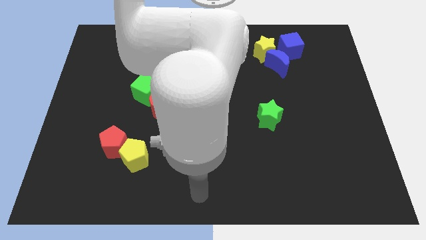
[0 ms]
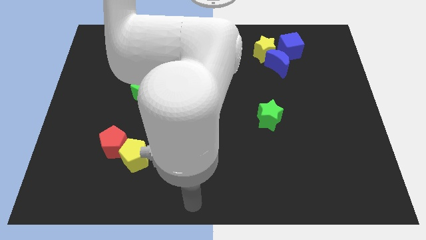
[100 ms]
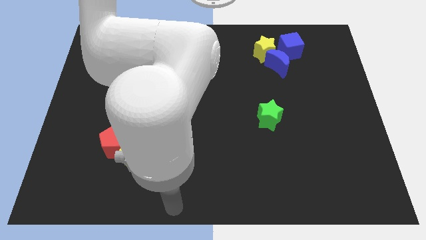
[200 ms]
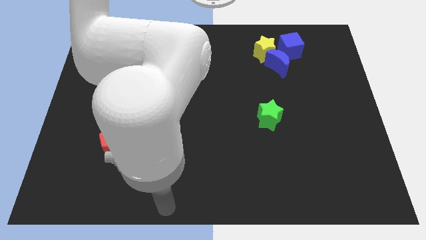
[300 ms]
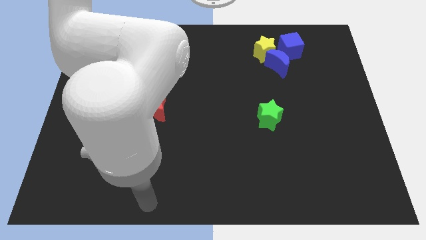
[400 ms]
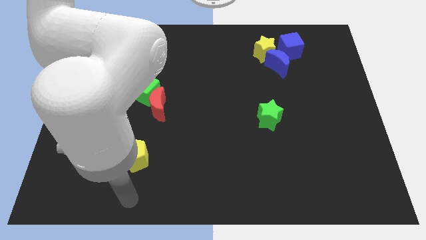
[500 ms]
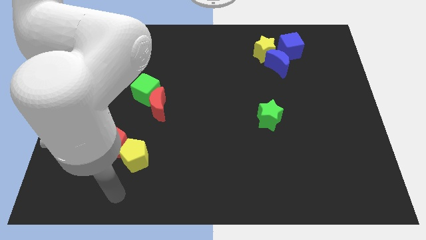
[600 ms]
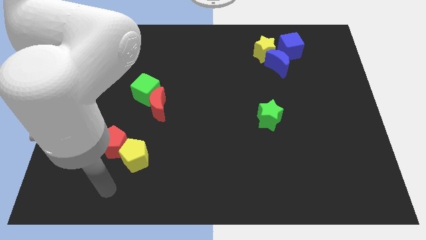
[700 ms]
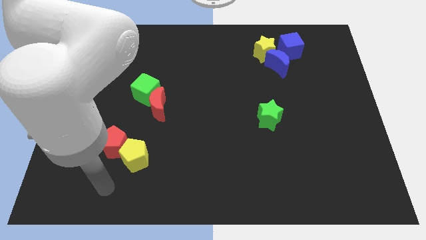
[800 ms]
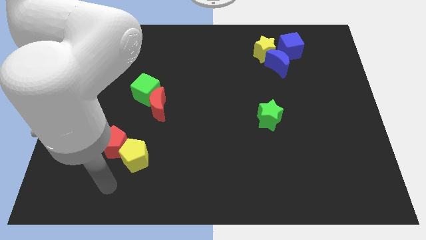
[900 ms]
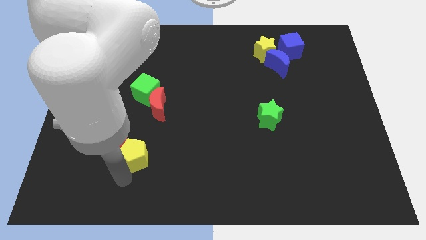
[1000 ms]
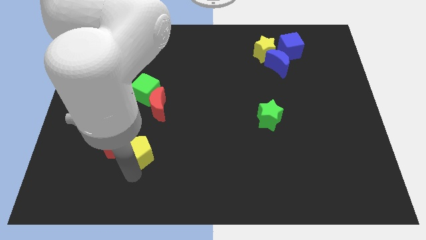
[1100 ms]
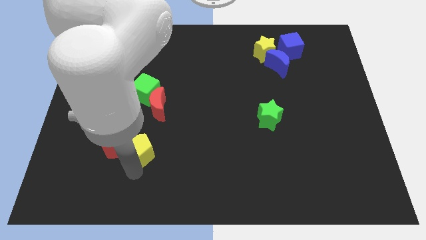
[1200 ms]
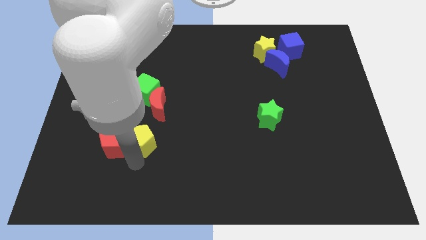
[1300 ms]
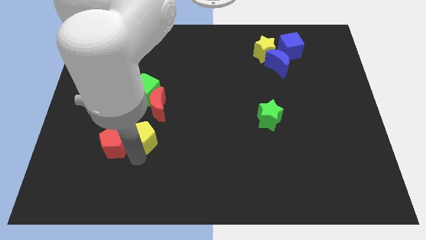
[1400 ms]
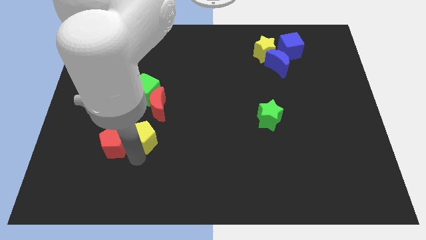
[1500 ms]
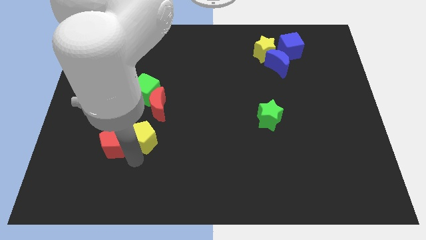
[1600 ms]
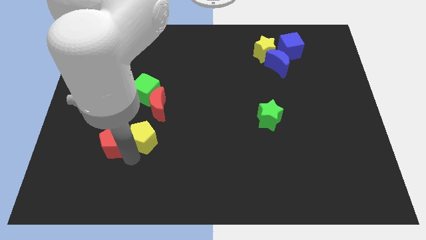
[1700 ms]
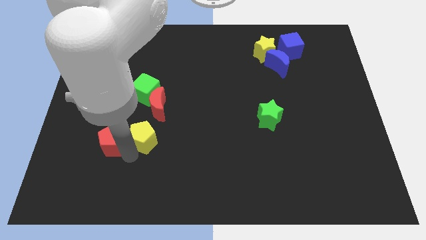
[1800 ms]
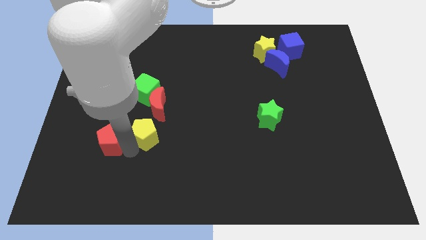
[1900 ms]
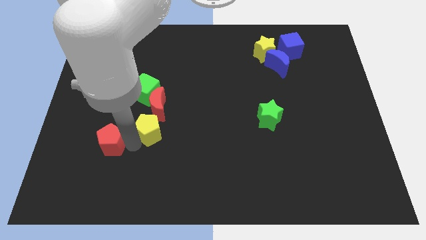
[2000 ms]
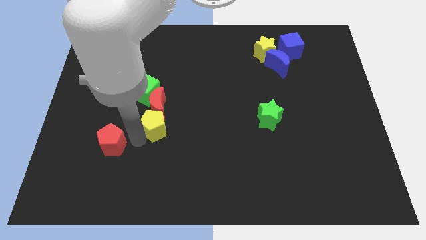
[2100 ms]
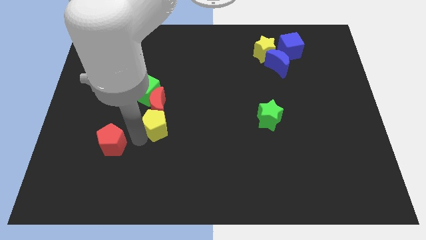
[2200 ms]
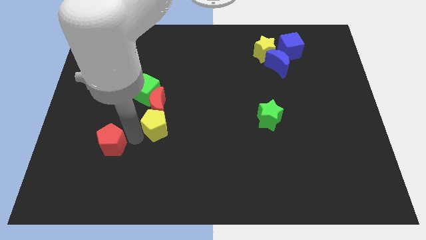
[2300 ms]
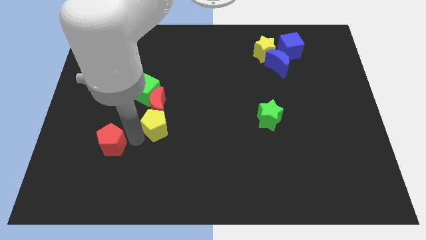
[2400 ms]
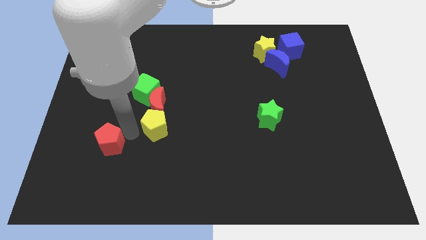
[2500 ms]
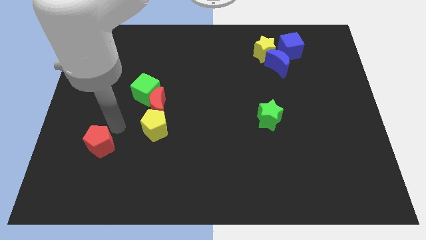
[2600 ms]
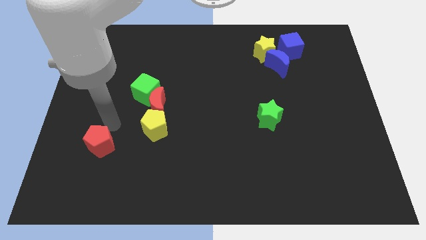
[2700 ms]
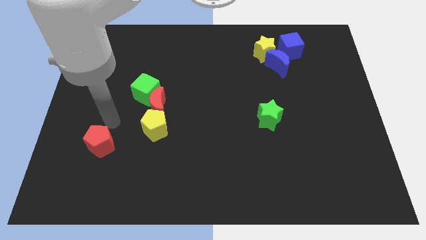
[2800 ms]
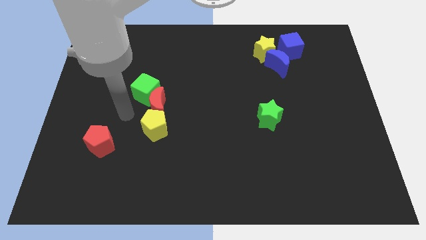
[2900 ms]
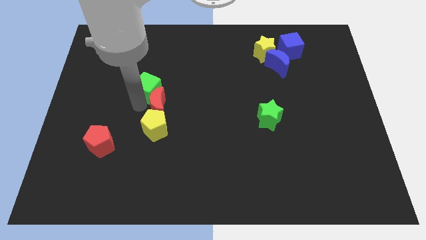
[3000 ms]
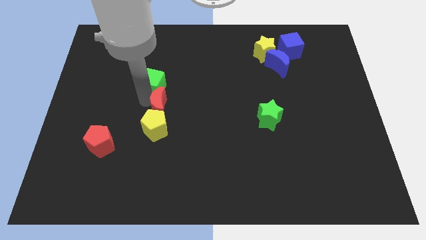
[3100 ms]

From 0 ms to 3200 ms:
push yellow pentagon towards red moon

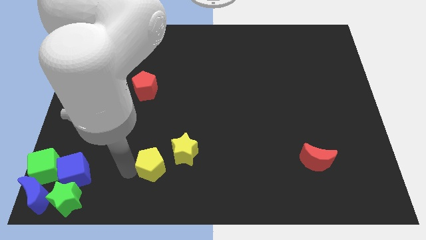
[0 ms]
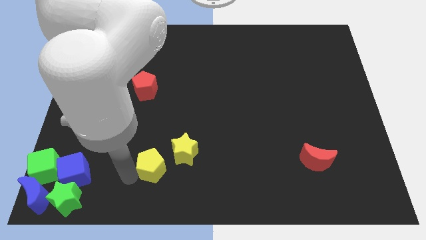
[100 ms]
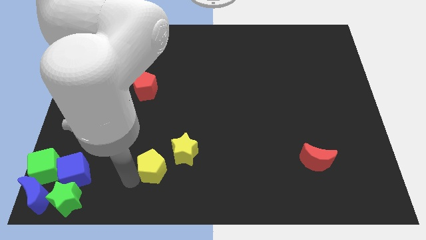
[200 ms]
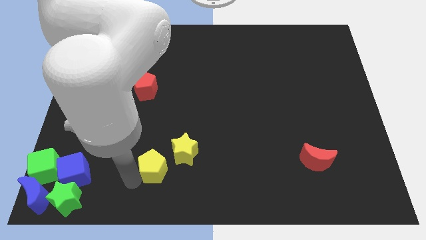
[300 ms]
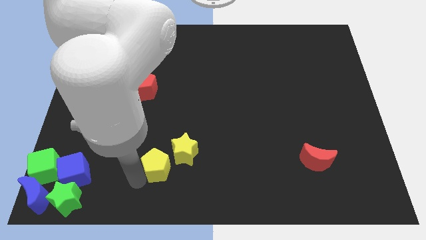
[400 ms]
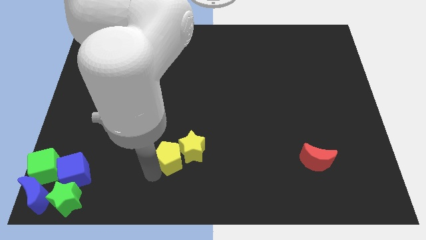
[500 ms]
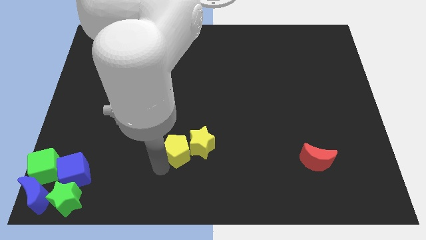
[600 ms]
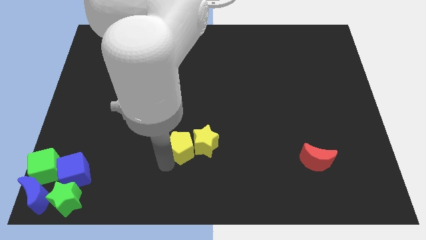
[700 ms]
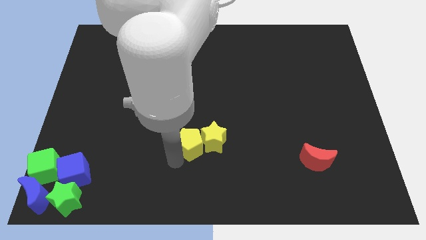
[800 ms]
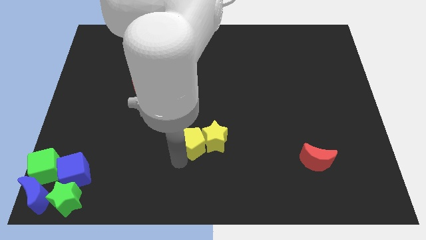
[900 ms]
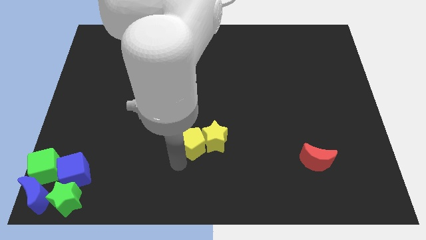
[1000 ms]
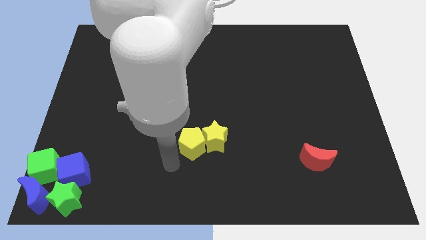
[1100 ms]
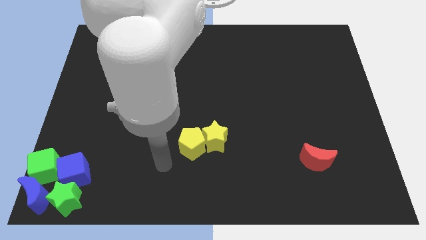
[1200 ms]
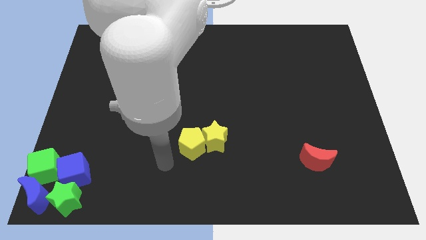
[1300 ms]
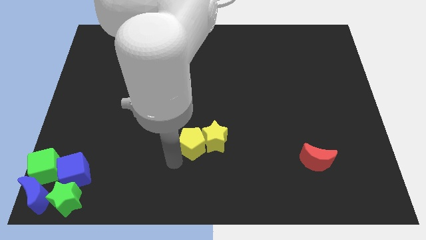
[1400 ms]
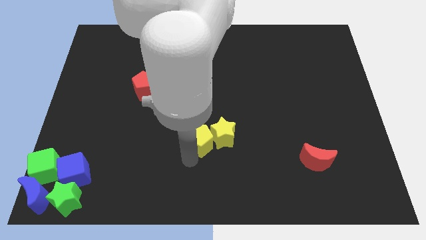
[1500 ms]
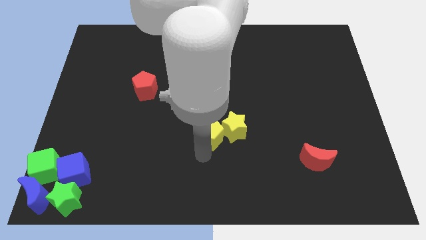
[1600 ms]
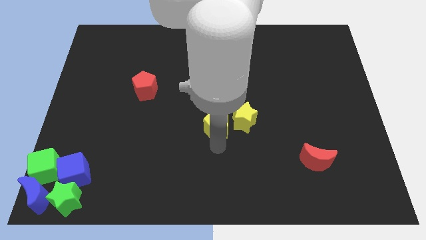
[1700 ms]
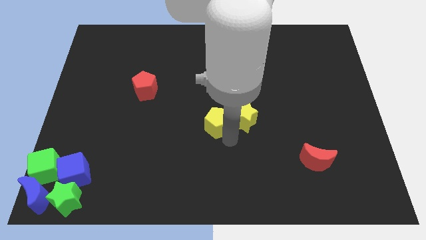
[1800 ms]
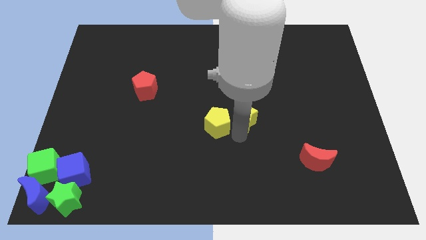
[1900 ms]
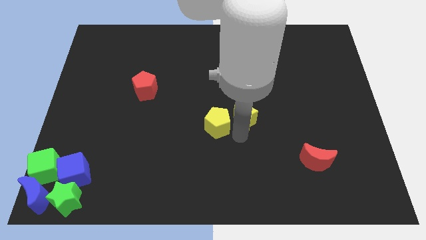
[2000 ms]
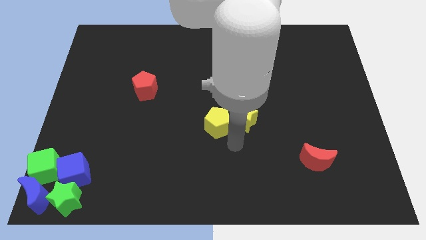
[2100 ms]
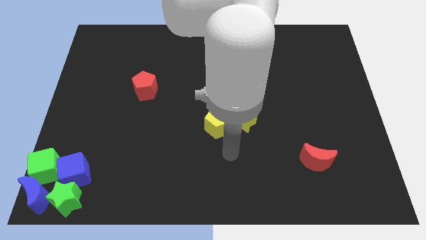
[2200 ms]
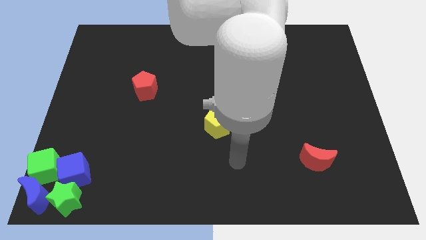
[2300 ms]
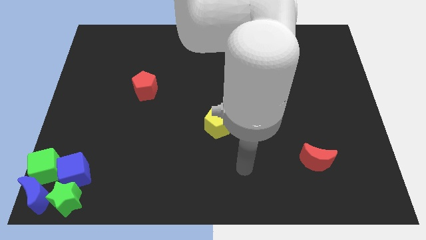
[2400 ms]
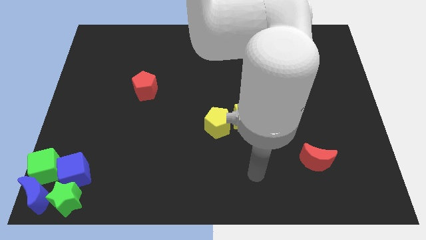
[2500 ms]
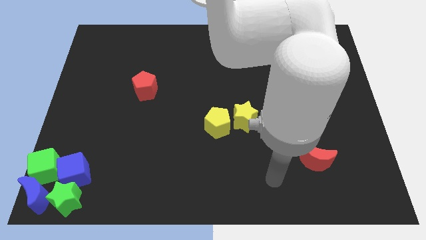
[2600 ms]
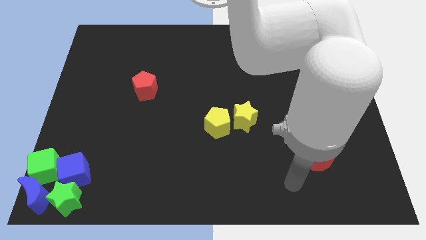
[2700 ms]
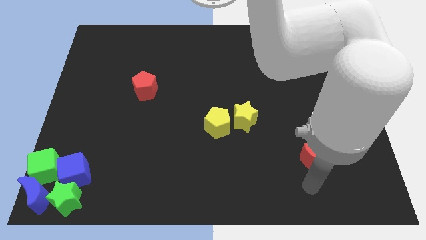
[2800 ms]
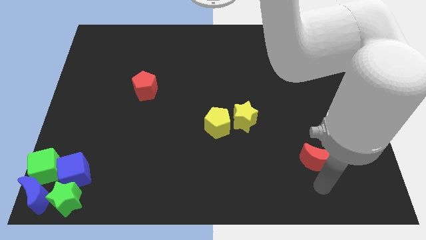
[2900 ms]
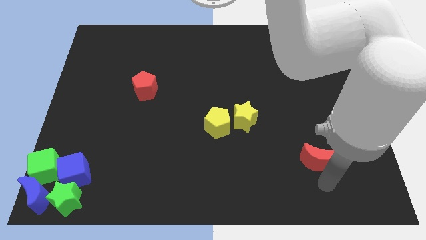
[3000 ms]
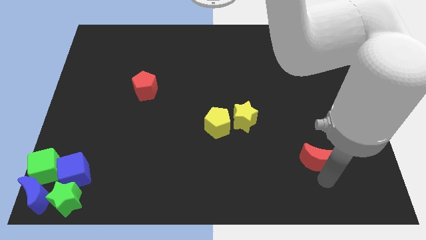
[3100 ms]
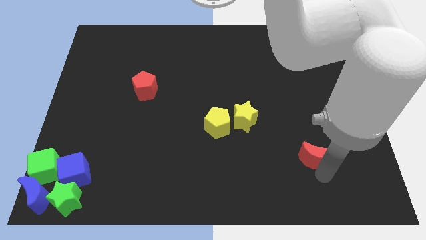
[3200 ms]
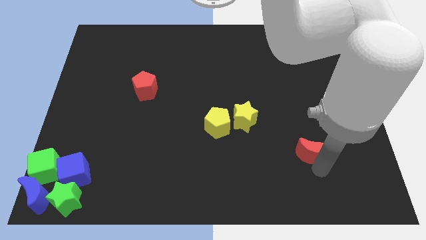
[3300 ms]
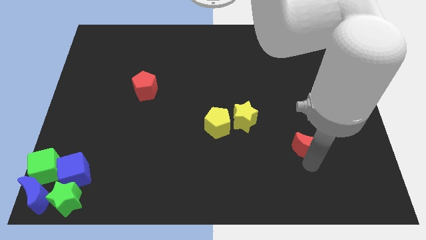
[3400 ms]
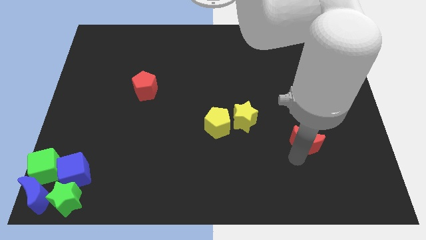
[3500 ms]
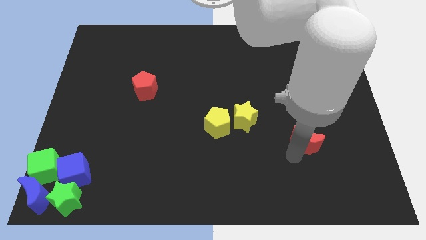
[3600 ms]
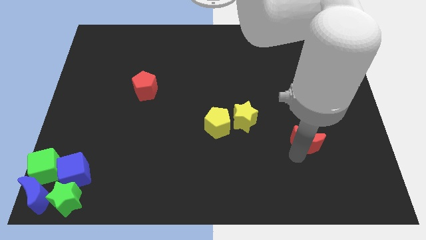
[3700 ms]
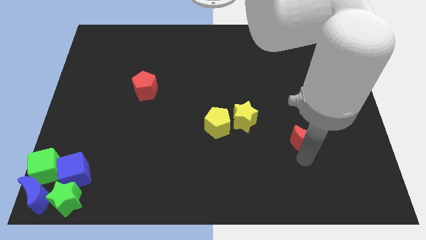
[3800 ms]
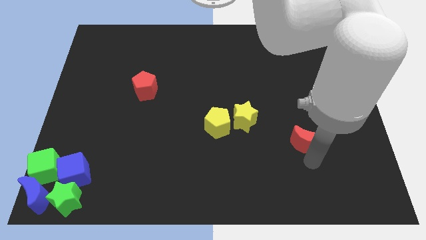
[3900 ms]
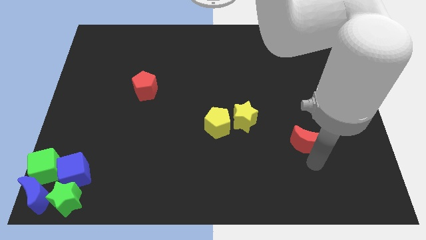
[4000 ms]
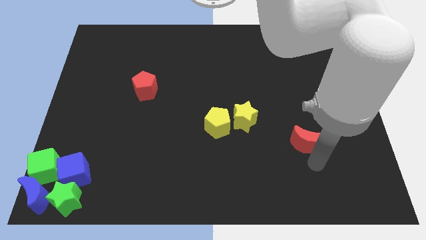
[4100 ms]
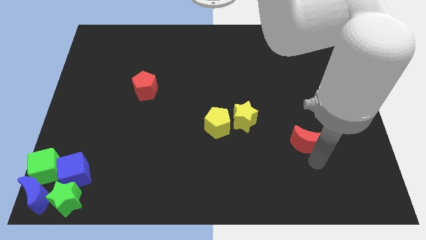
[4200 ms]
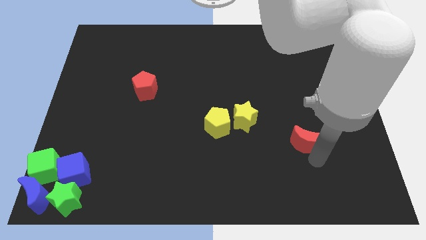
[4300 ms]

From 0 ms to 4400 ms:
move red moon slightly up

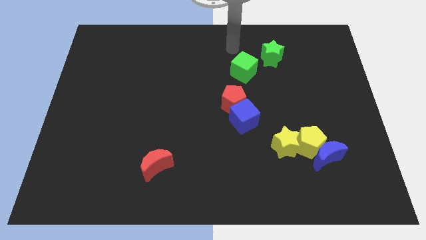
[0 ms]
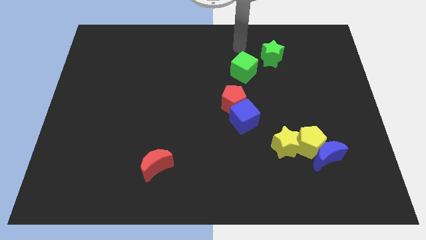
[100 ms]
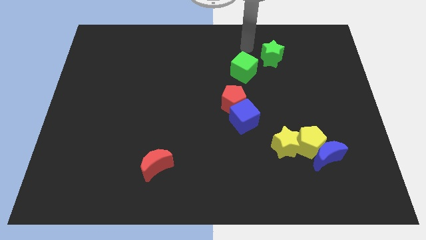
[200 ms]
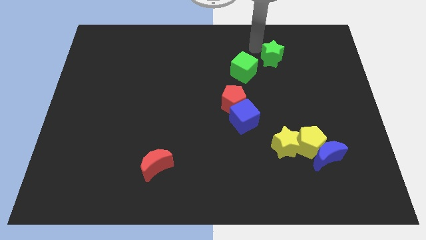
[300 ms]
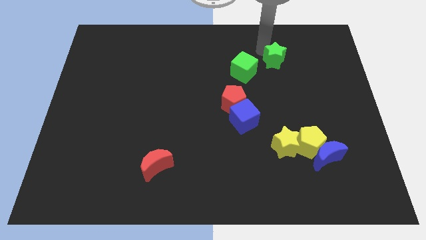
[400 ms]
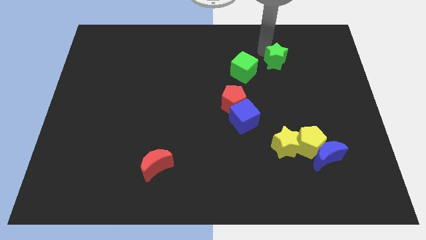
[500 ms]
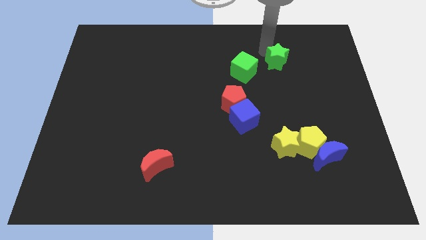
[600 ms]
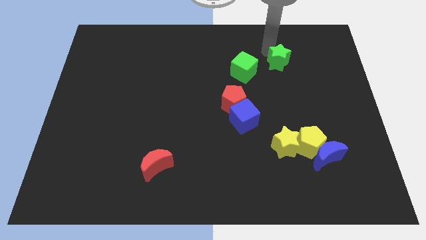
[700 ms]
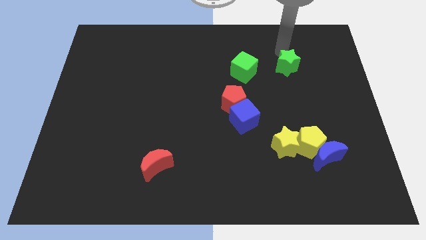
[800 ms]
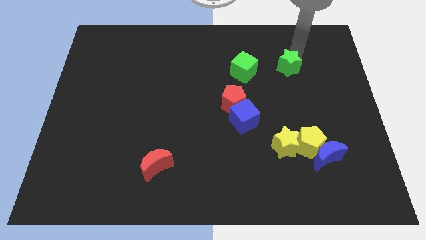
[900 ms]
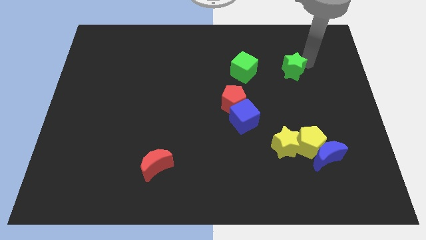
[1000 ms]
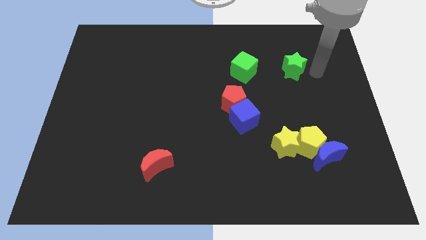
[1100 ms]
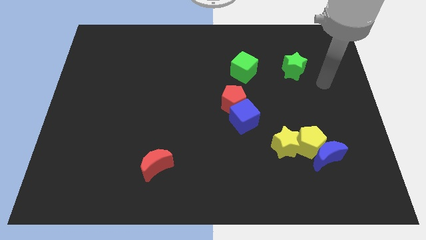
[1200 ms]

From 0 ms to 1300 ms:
place green star right ot the green cube
